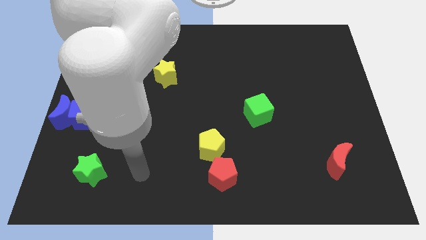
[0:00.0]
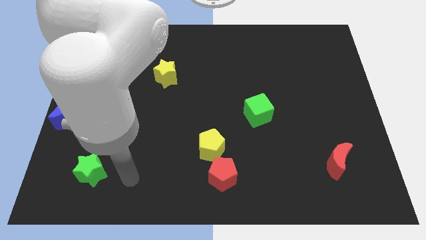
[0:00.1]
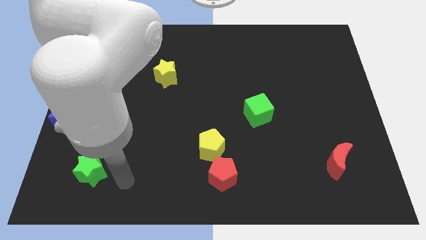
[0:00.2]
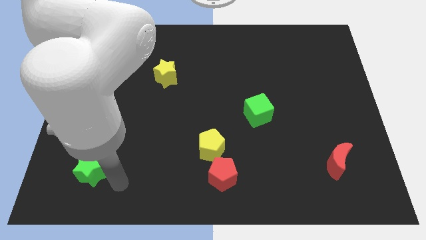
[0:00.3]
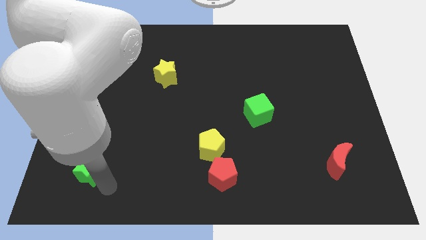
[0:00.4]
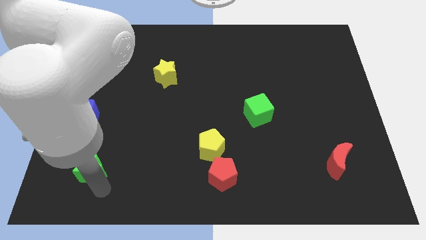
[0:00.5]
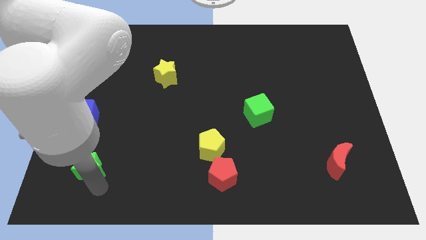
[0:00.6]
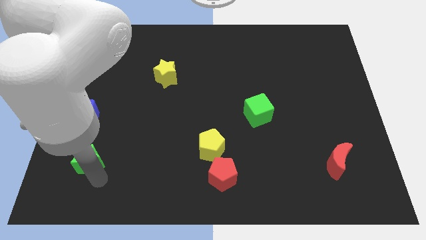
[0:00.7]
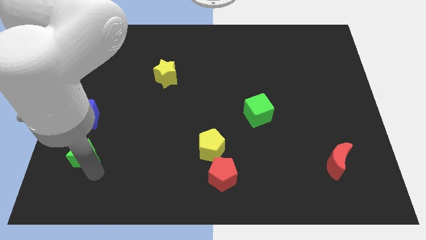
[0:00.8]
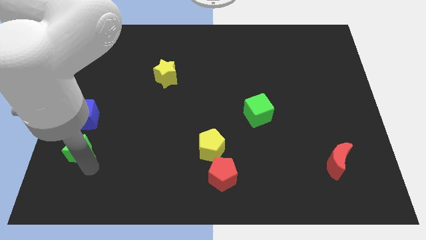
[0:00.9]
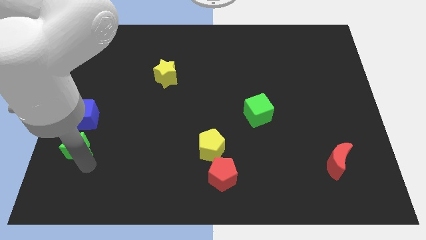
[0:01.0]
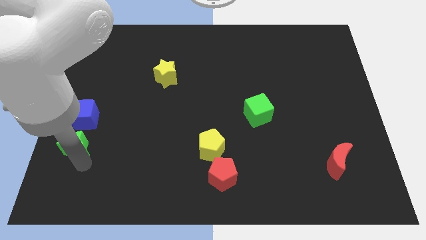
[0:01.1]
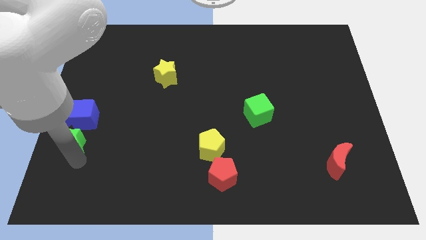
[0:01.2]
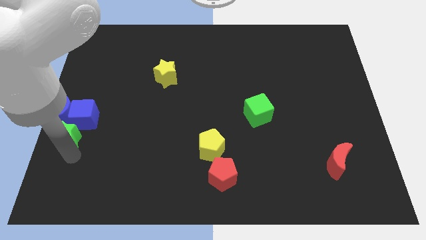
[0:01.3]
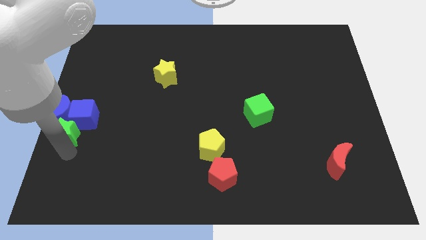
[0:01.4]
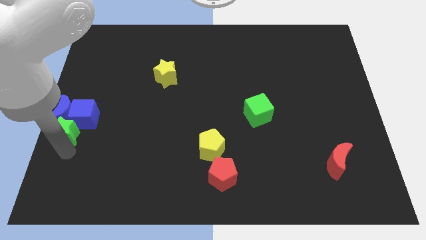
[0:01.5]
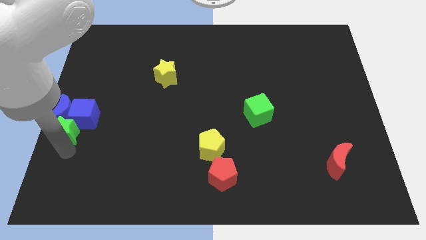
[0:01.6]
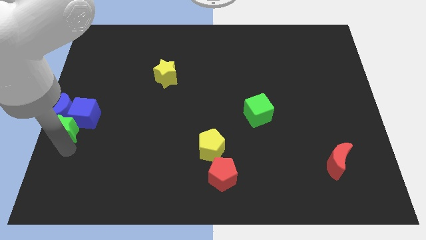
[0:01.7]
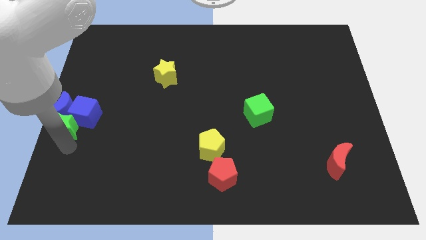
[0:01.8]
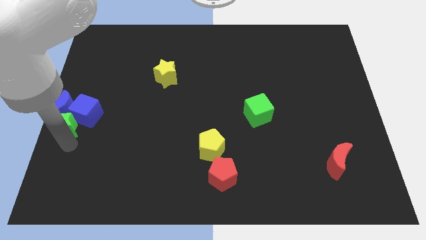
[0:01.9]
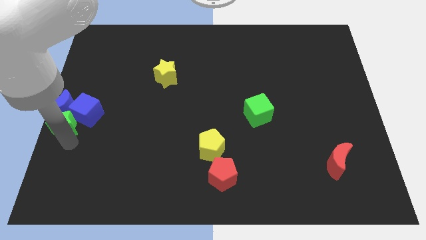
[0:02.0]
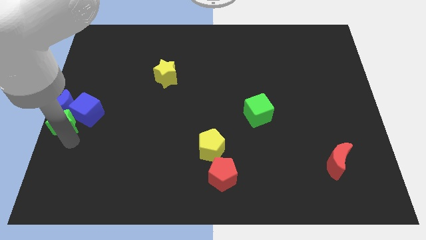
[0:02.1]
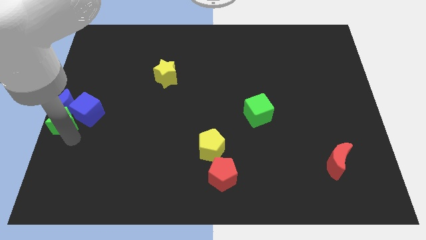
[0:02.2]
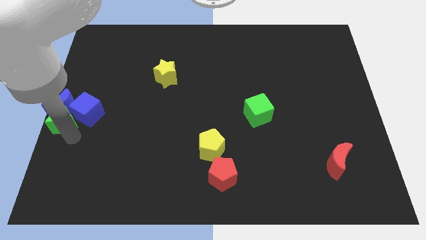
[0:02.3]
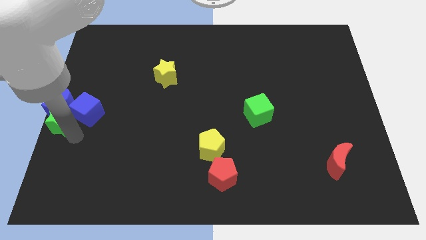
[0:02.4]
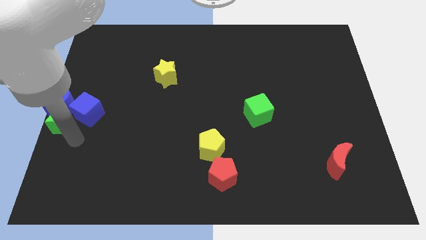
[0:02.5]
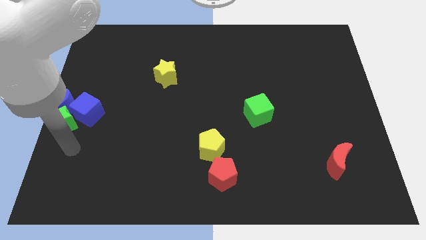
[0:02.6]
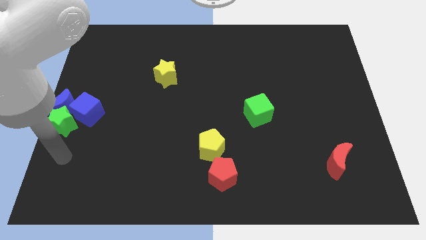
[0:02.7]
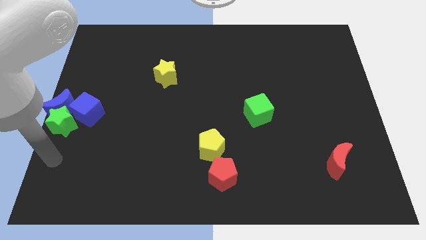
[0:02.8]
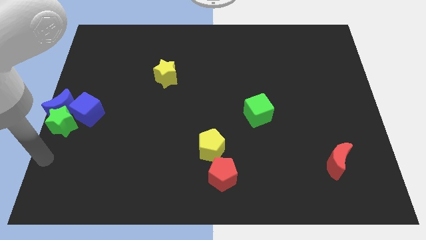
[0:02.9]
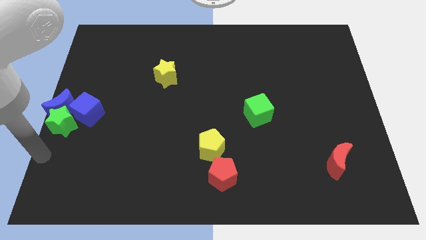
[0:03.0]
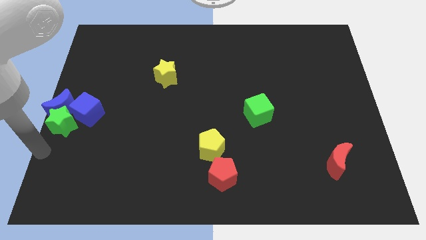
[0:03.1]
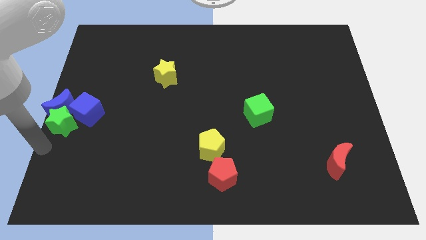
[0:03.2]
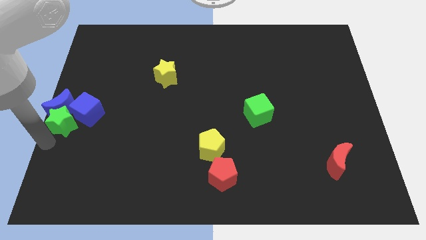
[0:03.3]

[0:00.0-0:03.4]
push the green star into the blue blocks

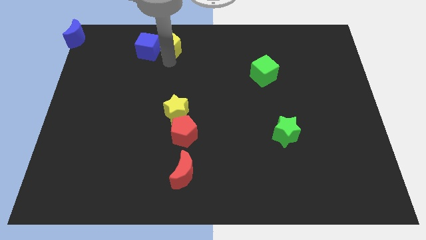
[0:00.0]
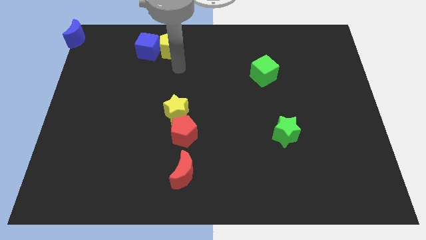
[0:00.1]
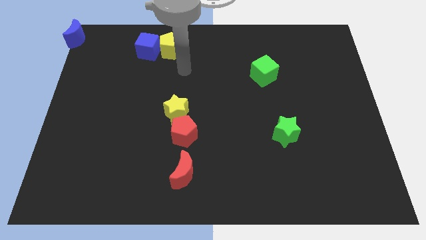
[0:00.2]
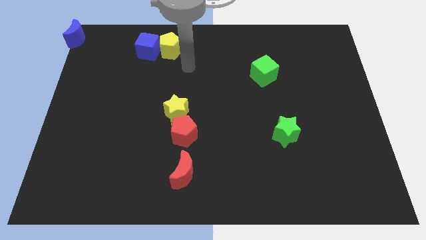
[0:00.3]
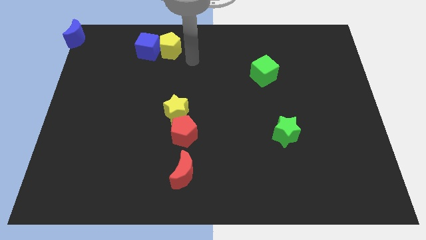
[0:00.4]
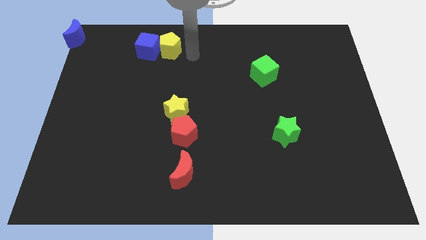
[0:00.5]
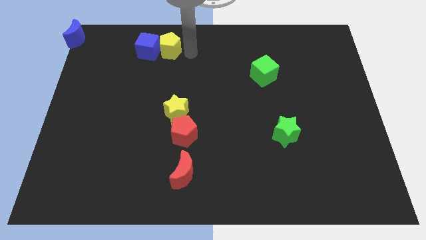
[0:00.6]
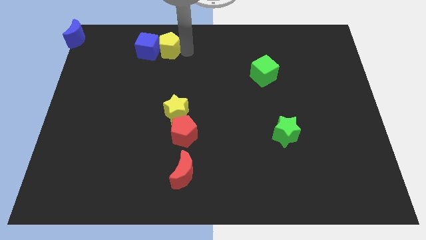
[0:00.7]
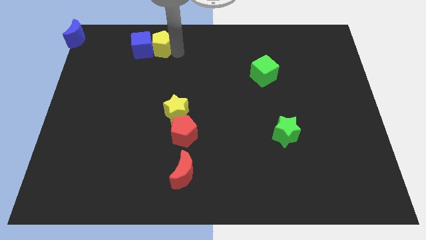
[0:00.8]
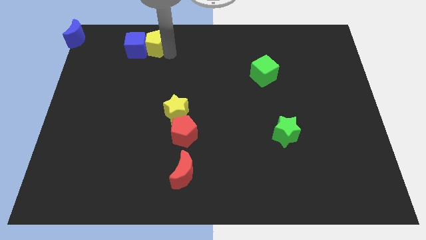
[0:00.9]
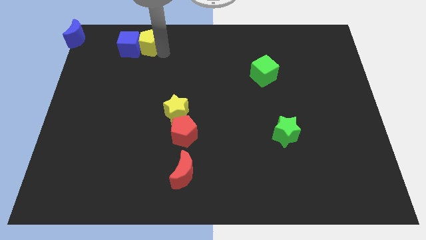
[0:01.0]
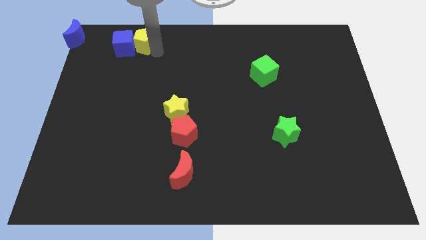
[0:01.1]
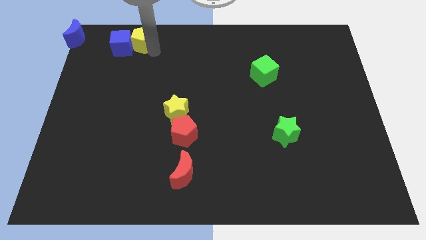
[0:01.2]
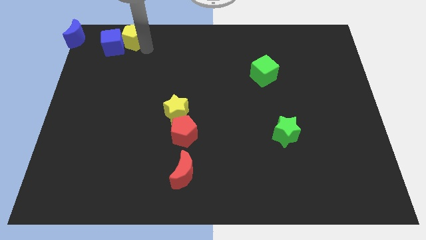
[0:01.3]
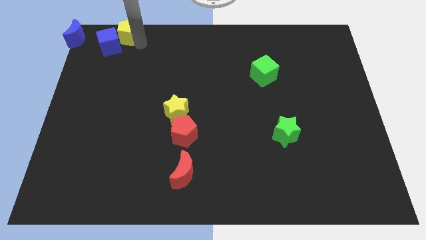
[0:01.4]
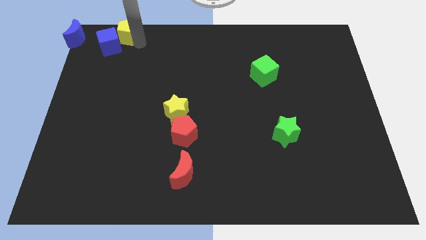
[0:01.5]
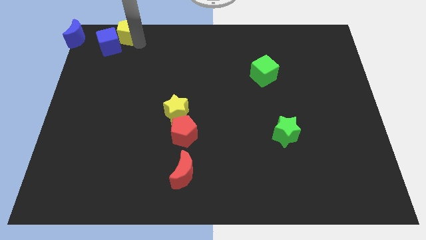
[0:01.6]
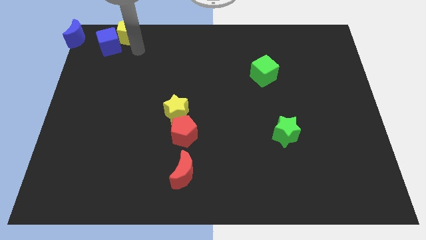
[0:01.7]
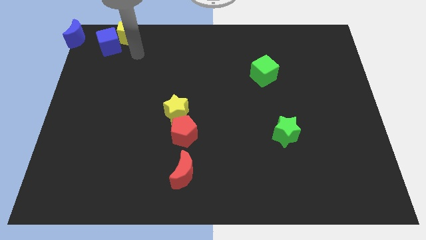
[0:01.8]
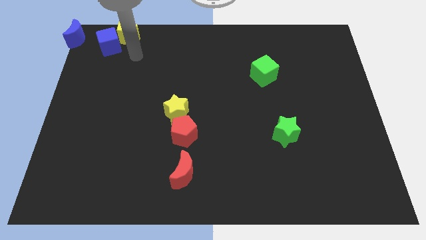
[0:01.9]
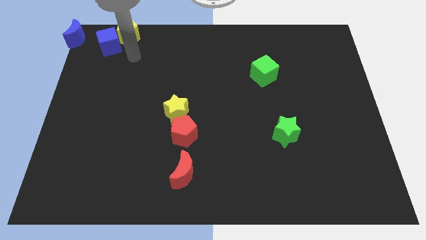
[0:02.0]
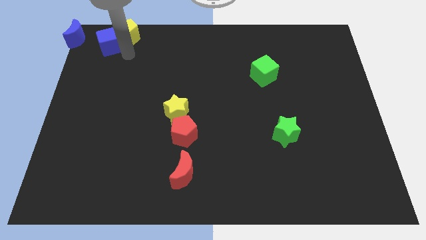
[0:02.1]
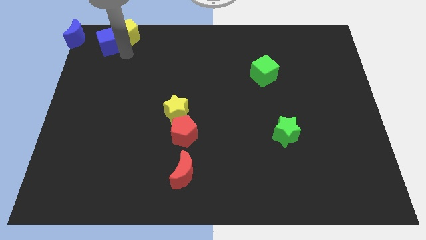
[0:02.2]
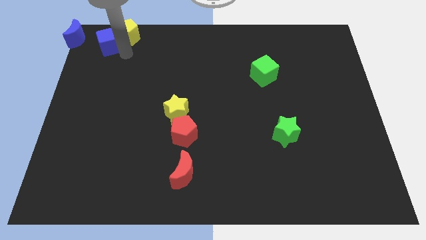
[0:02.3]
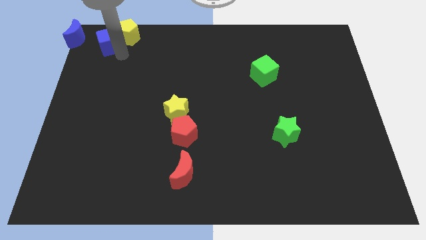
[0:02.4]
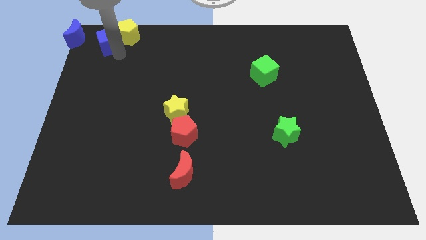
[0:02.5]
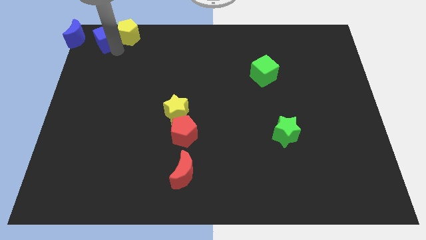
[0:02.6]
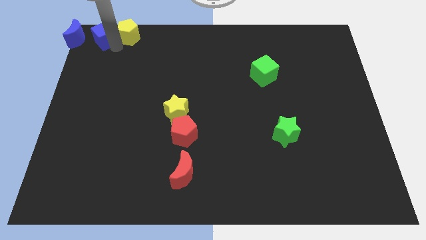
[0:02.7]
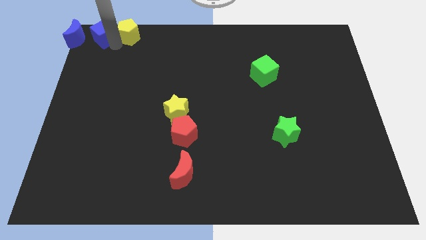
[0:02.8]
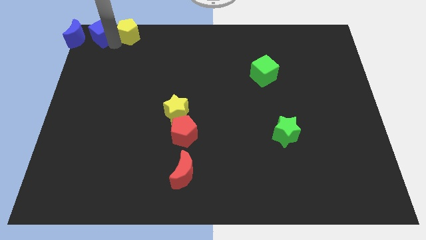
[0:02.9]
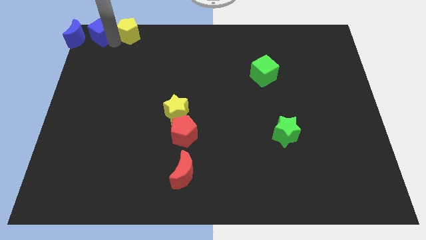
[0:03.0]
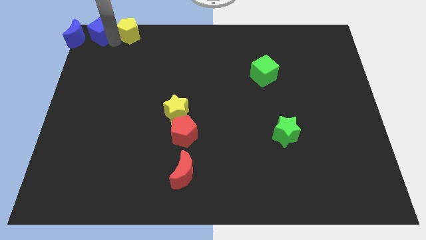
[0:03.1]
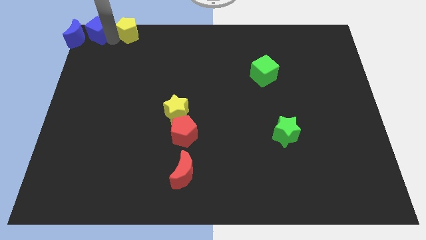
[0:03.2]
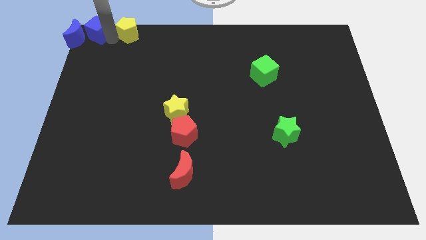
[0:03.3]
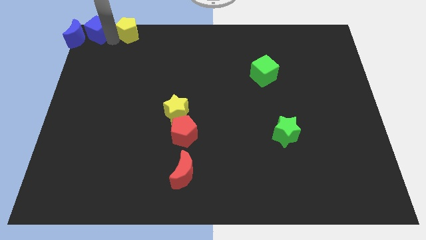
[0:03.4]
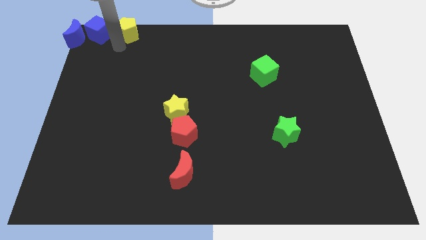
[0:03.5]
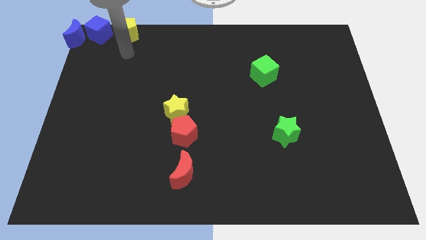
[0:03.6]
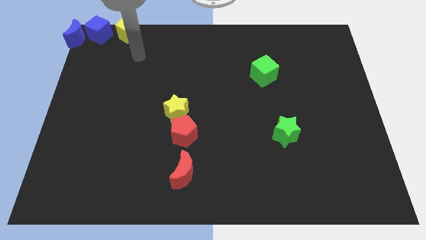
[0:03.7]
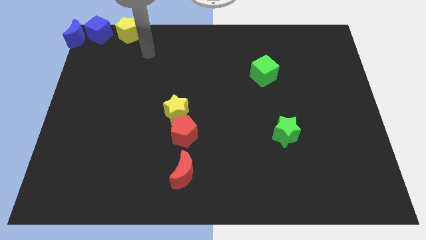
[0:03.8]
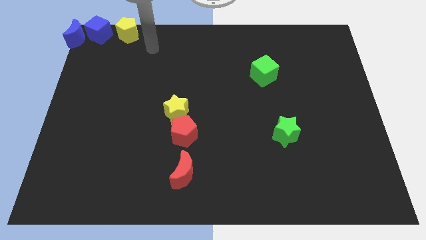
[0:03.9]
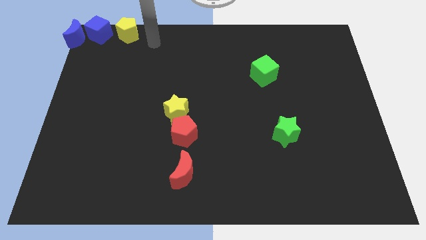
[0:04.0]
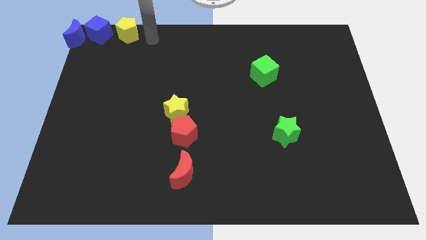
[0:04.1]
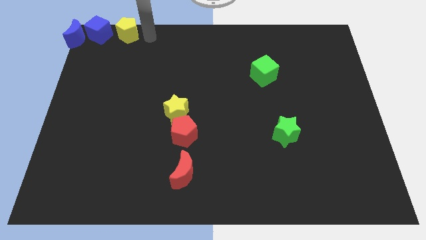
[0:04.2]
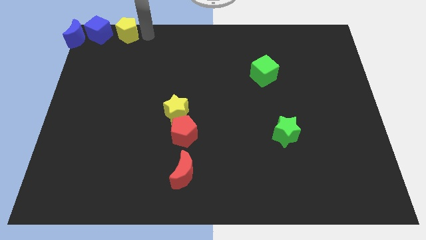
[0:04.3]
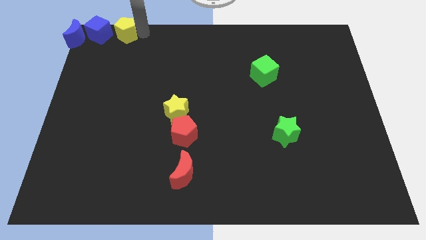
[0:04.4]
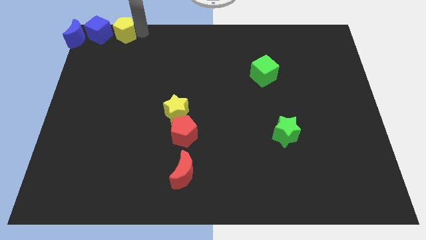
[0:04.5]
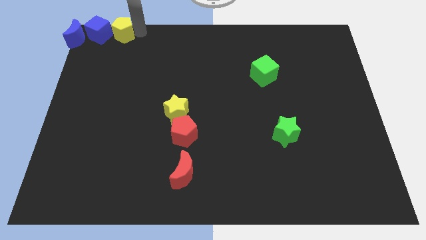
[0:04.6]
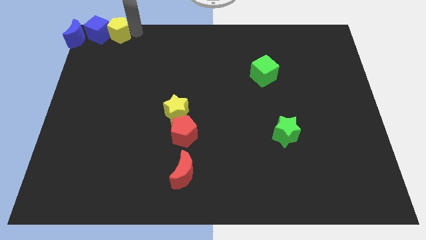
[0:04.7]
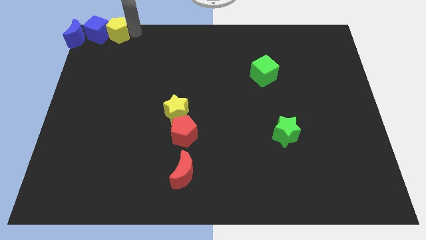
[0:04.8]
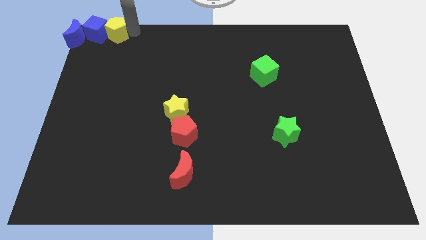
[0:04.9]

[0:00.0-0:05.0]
push the blue cube and yellow pentagon towards the top left corner of the board

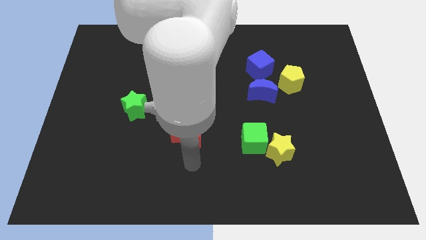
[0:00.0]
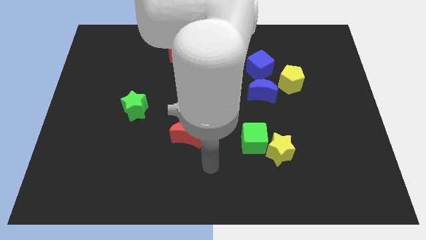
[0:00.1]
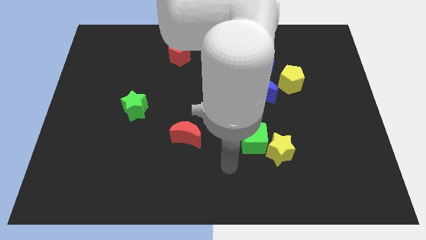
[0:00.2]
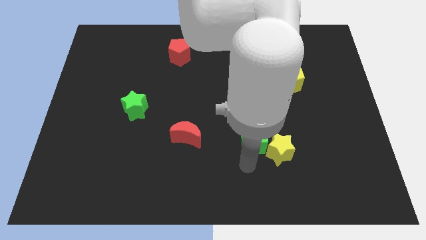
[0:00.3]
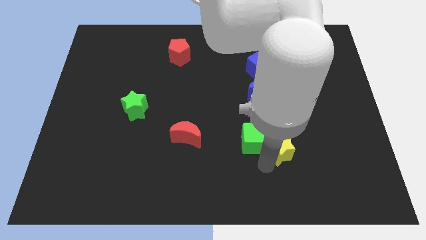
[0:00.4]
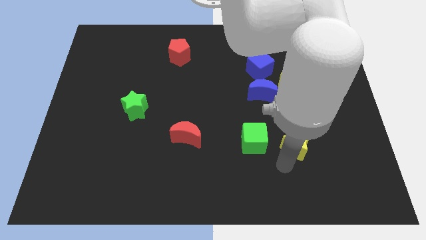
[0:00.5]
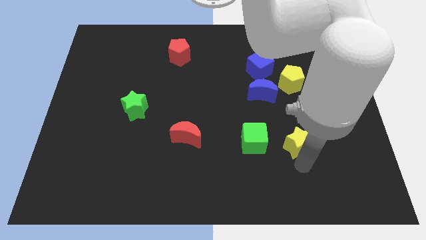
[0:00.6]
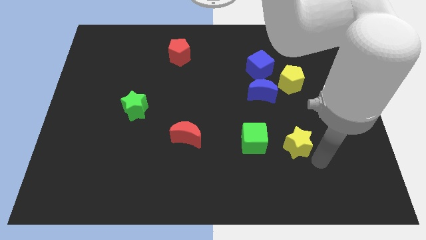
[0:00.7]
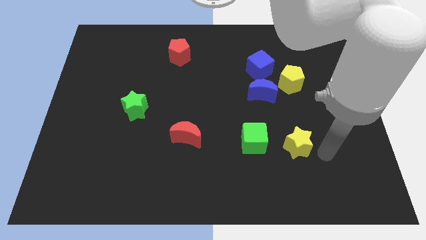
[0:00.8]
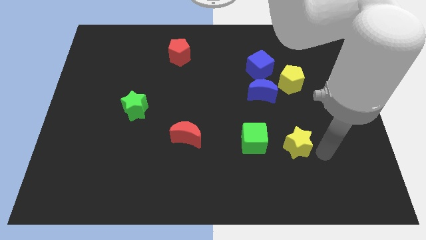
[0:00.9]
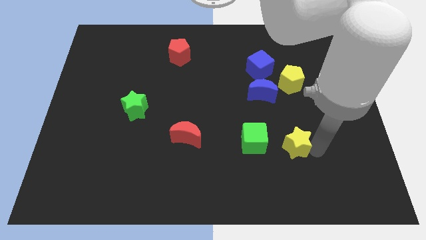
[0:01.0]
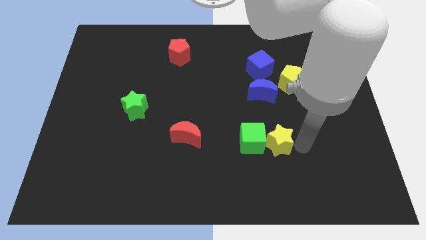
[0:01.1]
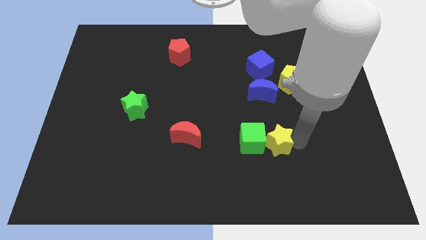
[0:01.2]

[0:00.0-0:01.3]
push the yellow star into the green cube
